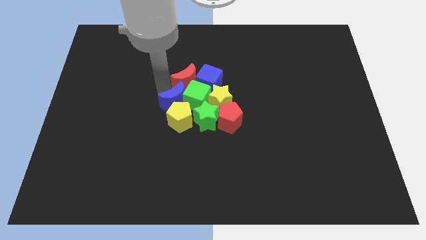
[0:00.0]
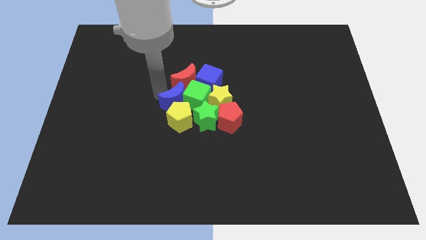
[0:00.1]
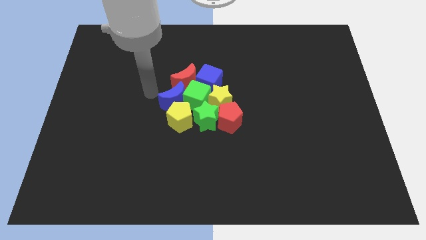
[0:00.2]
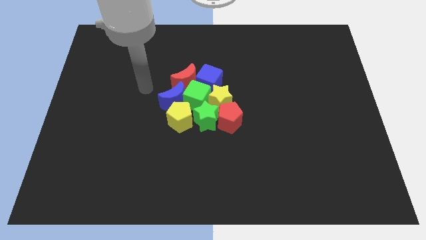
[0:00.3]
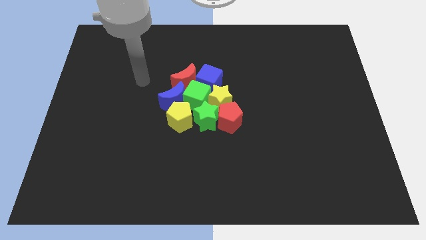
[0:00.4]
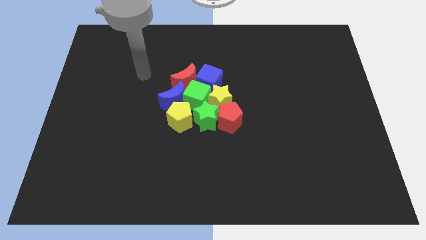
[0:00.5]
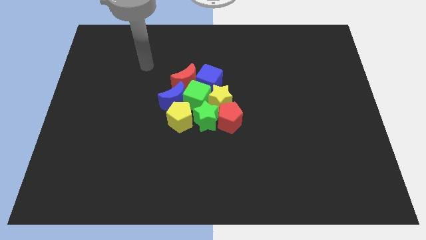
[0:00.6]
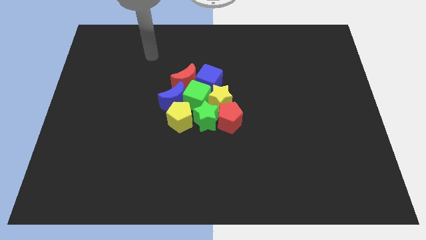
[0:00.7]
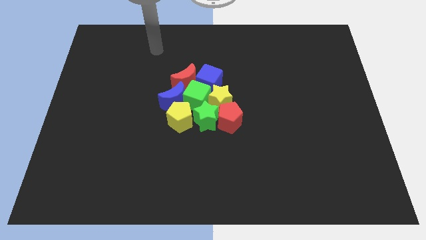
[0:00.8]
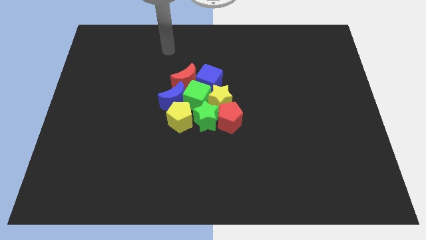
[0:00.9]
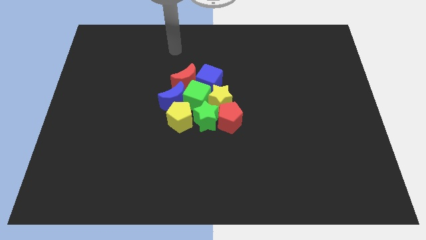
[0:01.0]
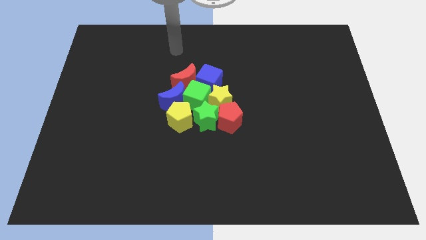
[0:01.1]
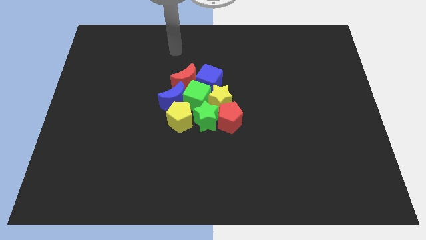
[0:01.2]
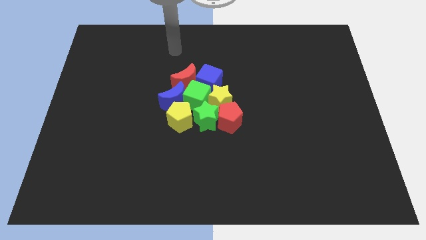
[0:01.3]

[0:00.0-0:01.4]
move the arm away from the blue moon

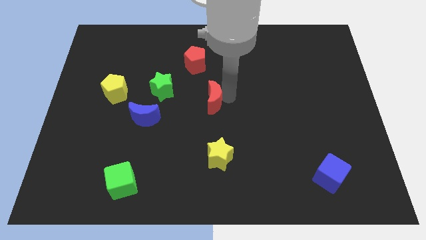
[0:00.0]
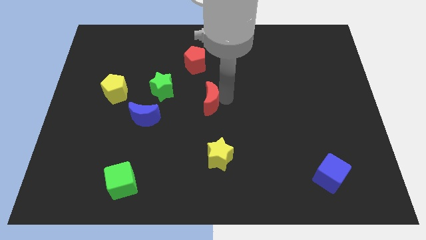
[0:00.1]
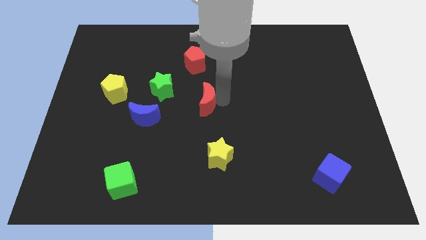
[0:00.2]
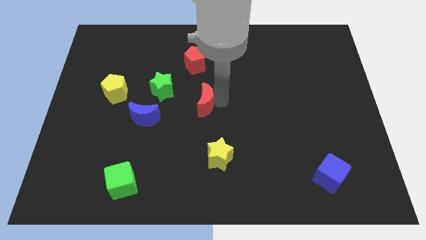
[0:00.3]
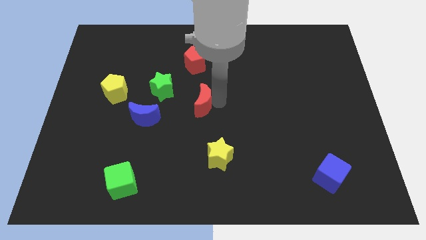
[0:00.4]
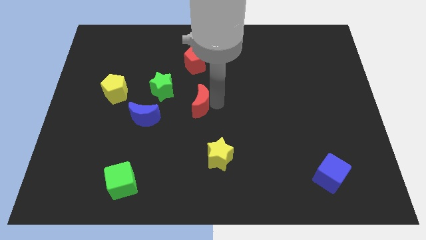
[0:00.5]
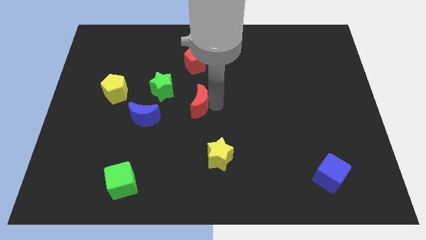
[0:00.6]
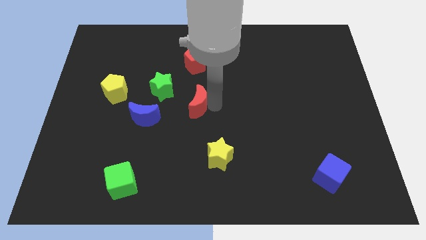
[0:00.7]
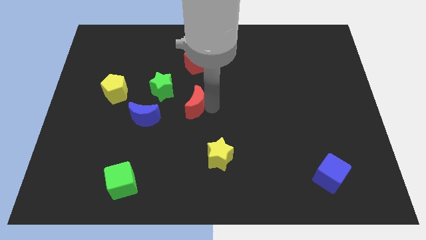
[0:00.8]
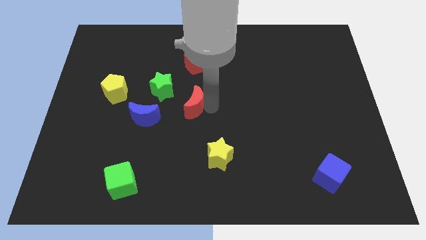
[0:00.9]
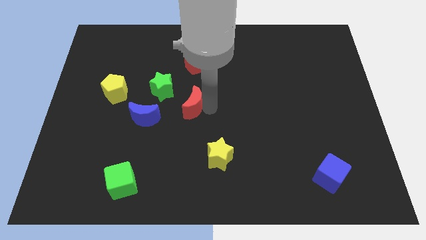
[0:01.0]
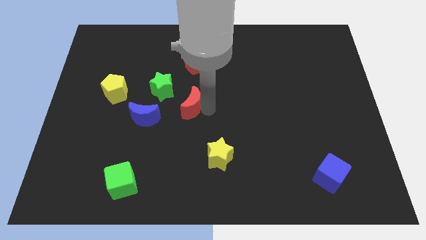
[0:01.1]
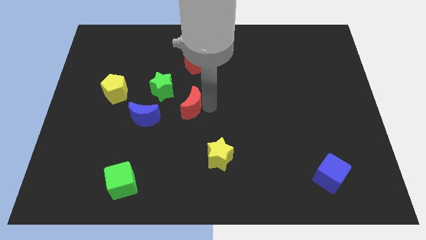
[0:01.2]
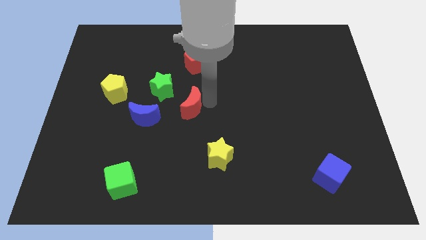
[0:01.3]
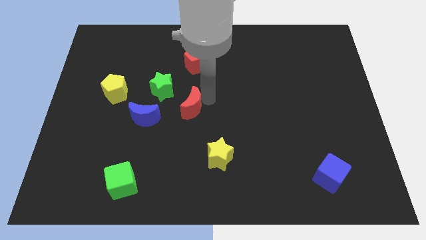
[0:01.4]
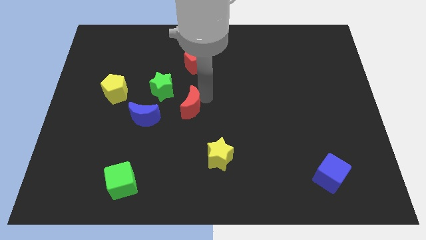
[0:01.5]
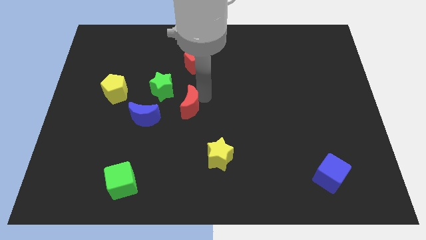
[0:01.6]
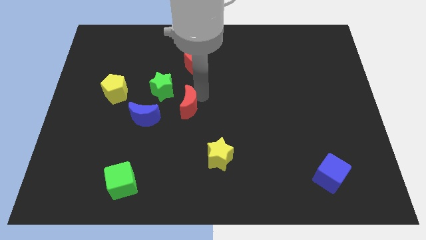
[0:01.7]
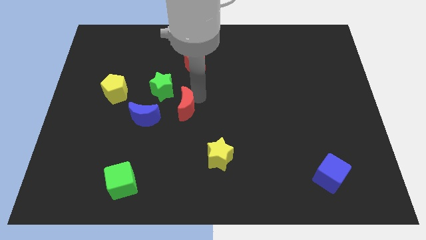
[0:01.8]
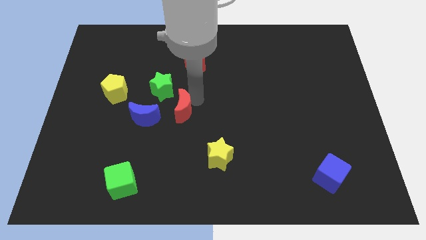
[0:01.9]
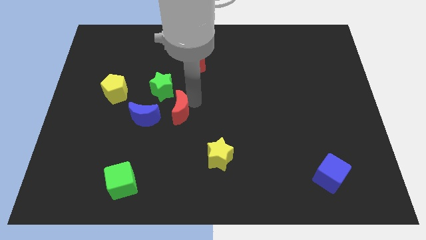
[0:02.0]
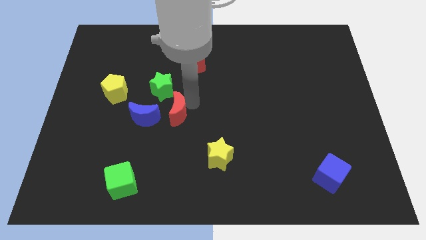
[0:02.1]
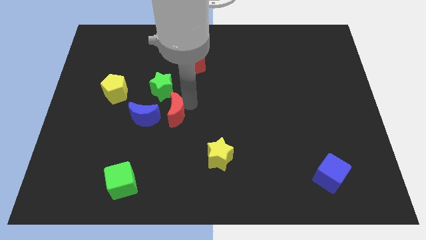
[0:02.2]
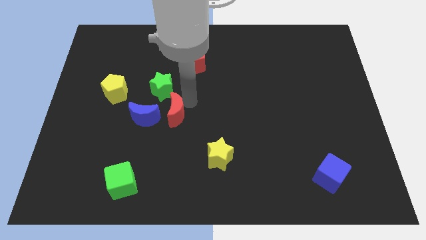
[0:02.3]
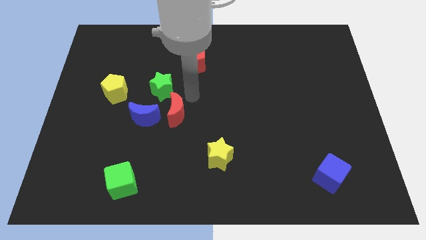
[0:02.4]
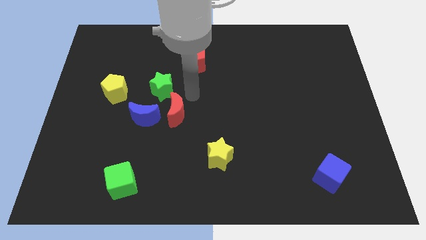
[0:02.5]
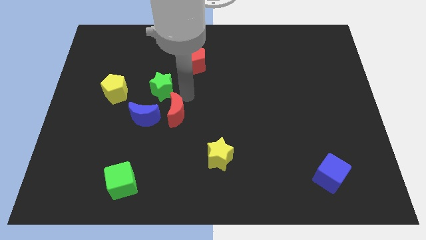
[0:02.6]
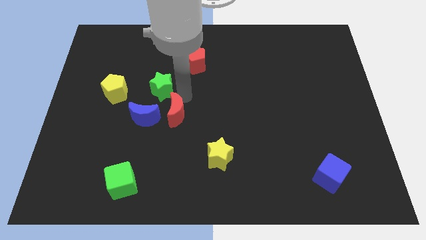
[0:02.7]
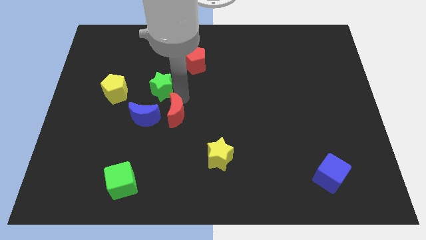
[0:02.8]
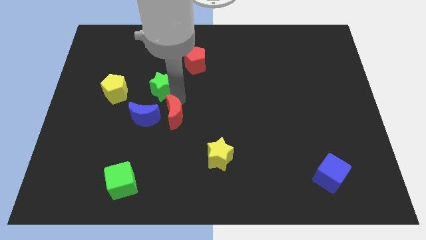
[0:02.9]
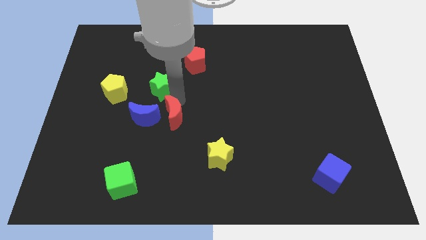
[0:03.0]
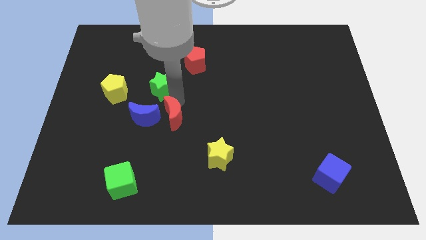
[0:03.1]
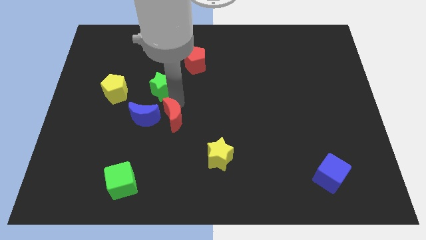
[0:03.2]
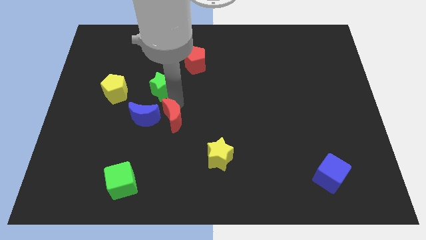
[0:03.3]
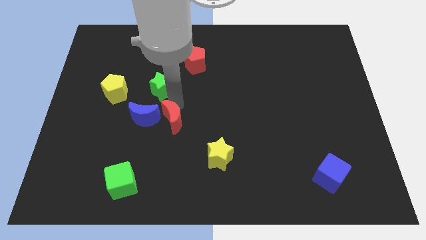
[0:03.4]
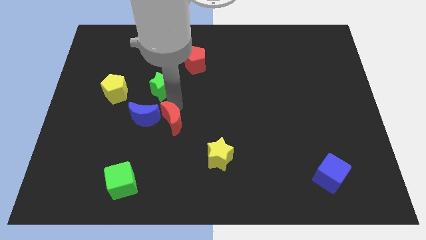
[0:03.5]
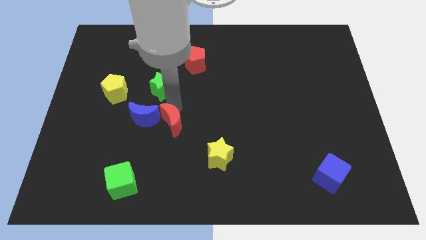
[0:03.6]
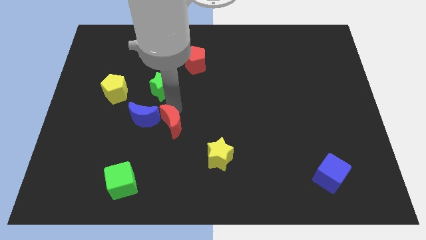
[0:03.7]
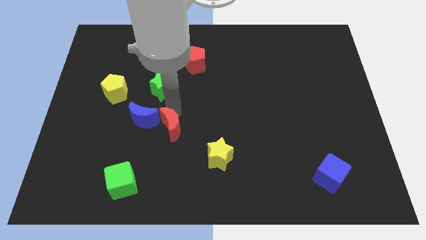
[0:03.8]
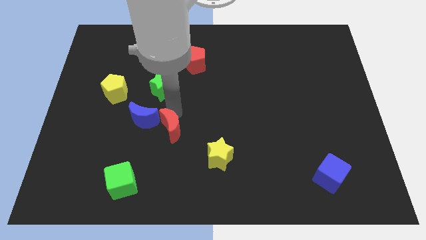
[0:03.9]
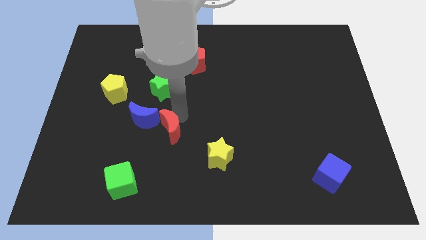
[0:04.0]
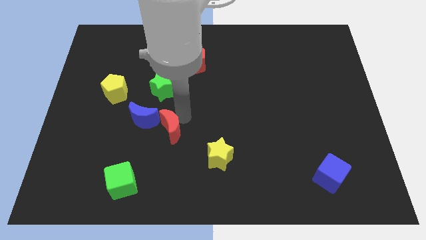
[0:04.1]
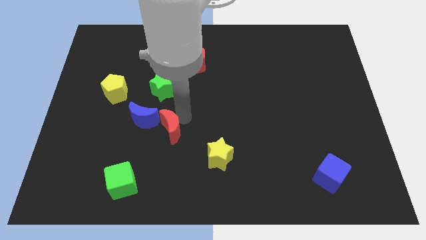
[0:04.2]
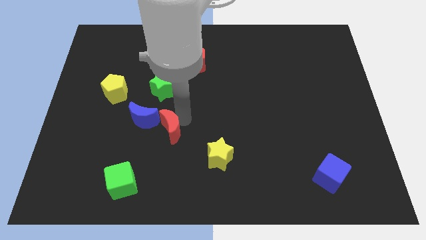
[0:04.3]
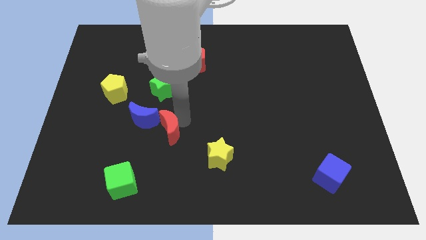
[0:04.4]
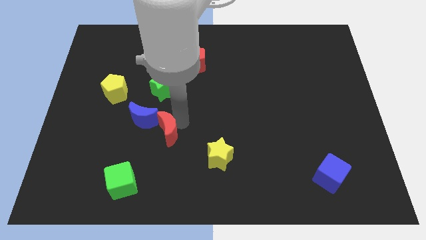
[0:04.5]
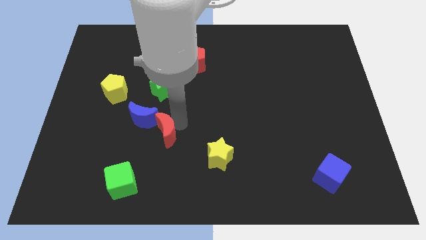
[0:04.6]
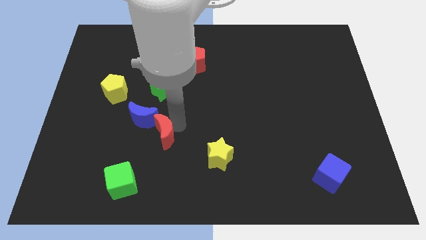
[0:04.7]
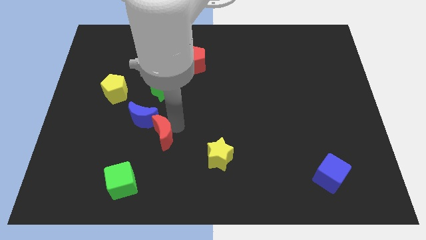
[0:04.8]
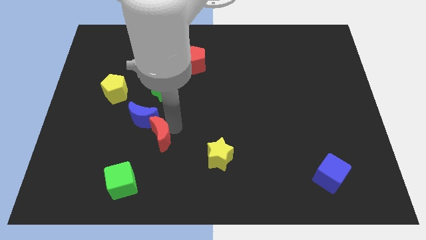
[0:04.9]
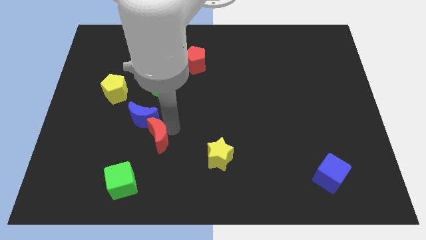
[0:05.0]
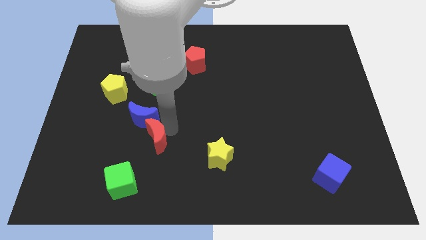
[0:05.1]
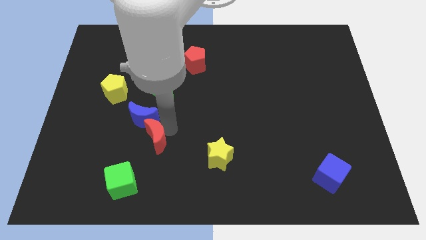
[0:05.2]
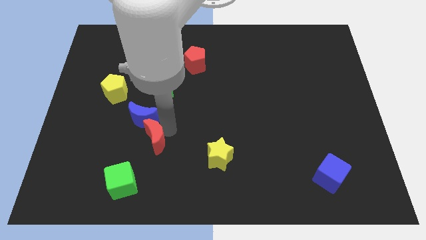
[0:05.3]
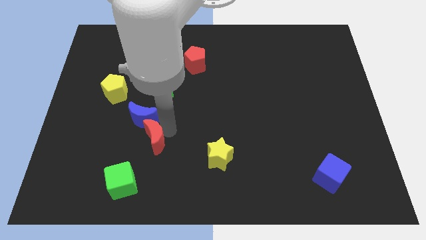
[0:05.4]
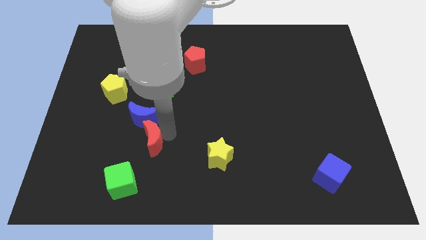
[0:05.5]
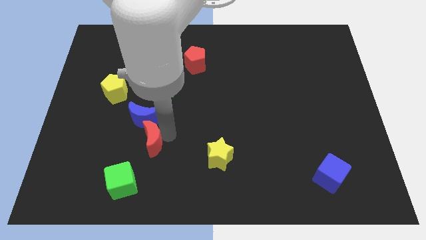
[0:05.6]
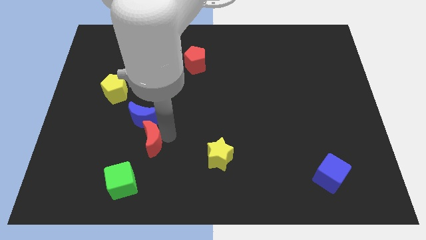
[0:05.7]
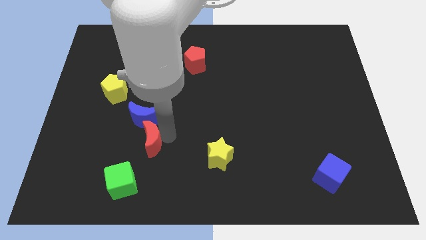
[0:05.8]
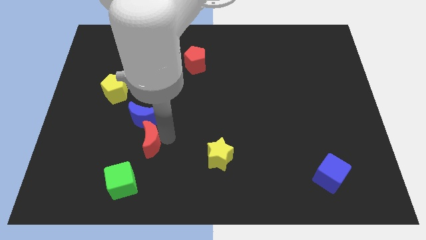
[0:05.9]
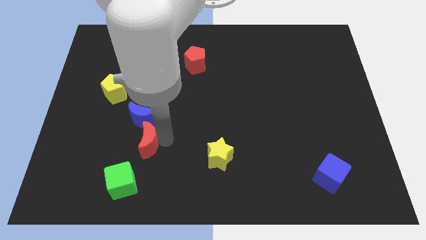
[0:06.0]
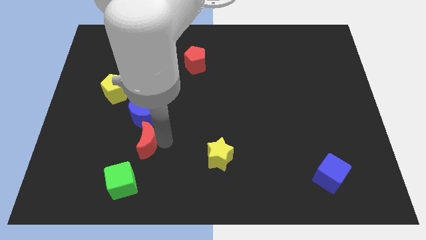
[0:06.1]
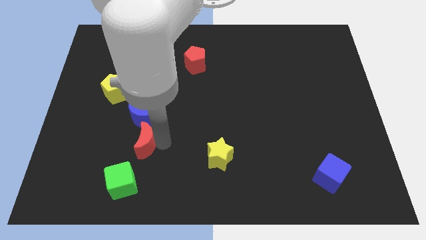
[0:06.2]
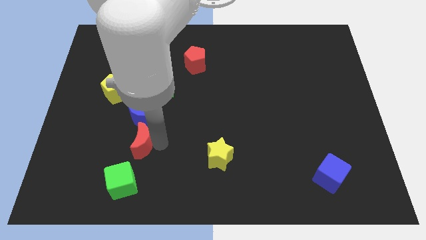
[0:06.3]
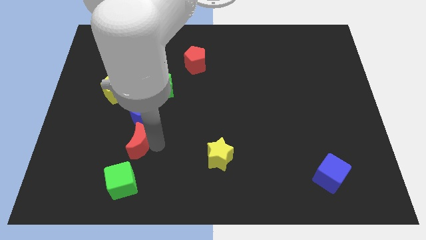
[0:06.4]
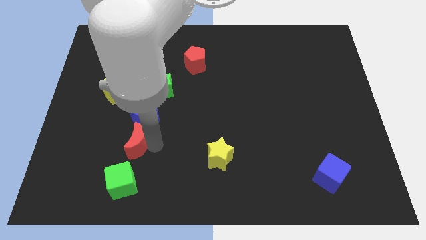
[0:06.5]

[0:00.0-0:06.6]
push the red moon to the bottom side of the blue moon

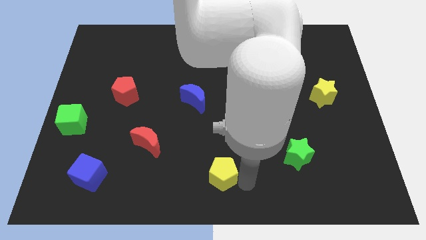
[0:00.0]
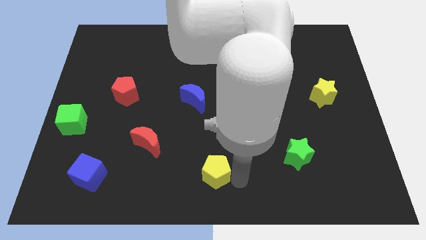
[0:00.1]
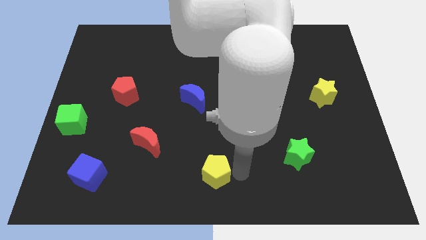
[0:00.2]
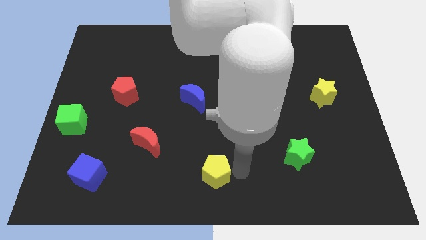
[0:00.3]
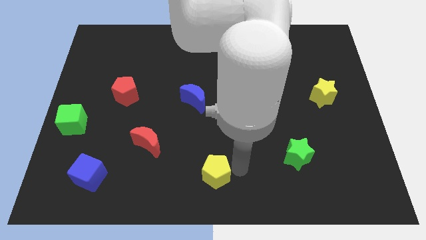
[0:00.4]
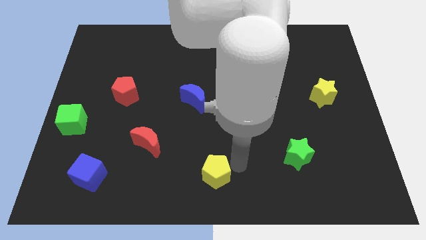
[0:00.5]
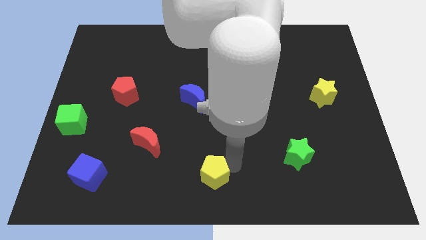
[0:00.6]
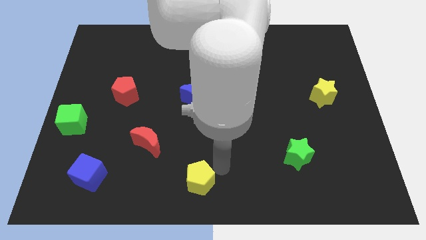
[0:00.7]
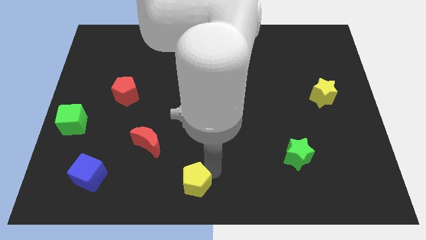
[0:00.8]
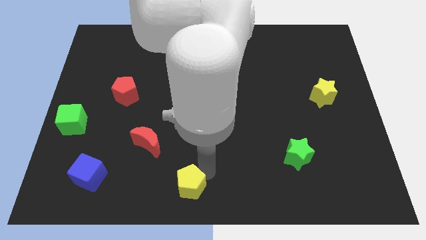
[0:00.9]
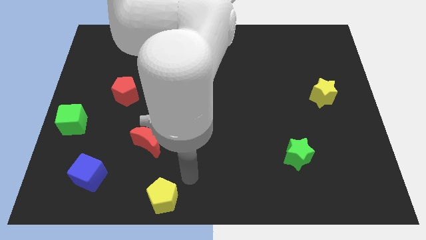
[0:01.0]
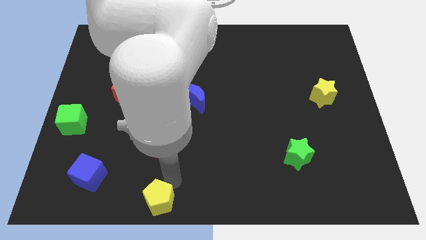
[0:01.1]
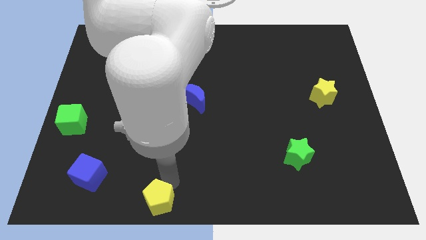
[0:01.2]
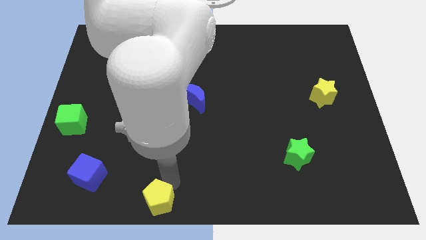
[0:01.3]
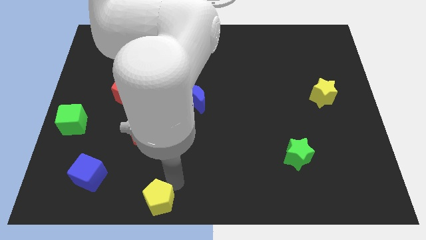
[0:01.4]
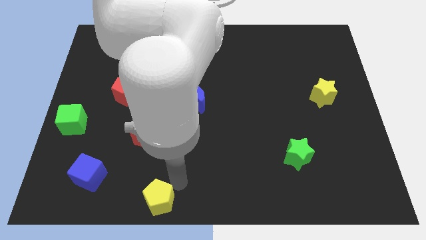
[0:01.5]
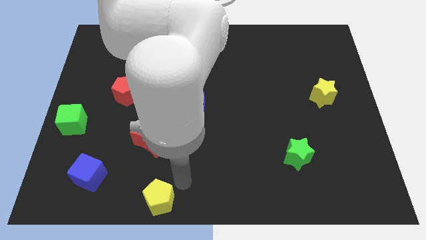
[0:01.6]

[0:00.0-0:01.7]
move the yellow pentagon towards the bottom of red crescent
